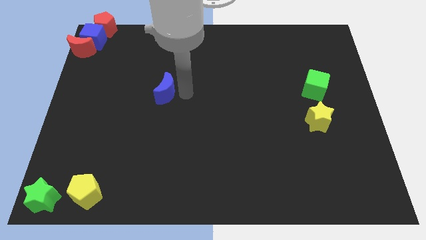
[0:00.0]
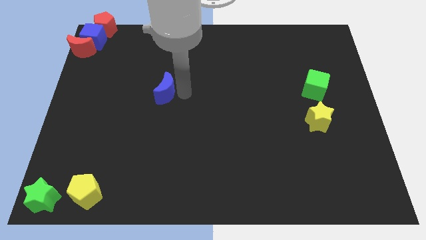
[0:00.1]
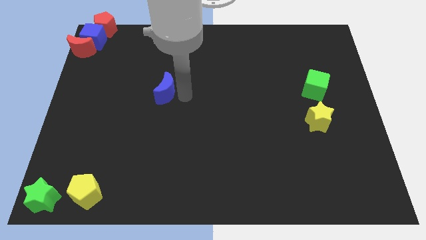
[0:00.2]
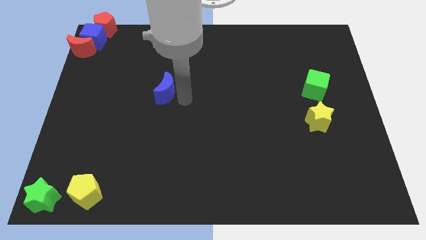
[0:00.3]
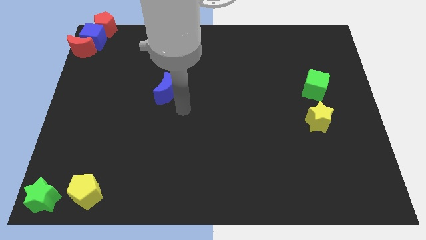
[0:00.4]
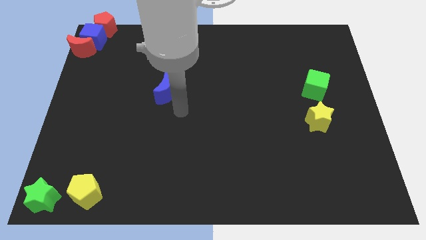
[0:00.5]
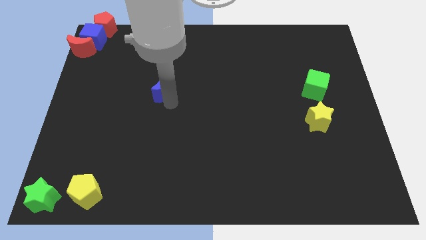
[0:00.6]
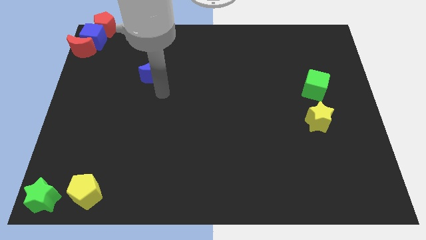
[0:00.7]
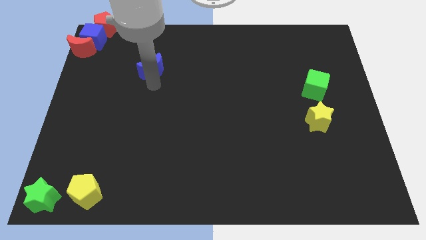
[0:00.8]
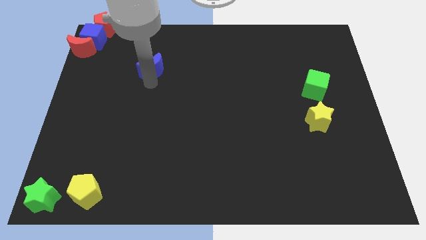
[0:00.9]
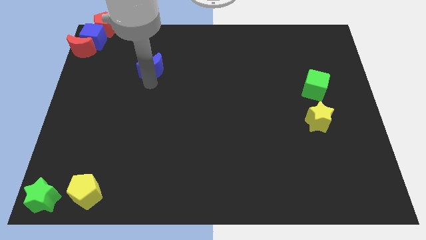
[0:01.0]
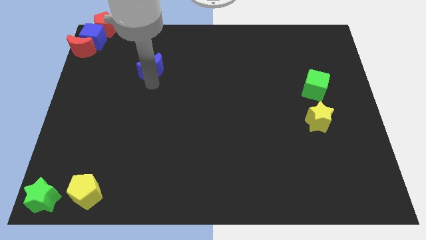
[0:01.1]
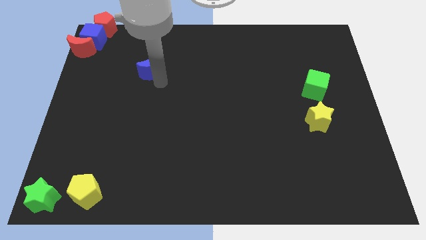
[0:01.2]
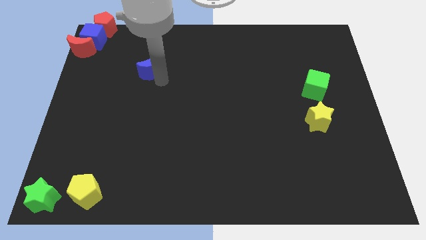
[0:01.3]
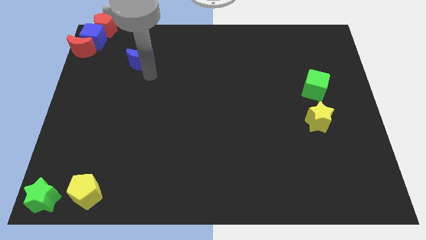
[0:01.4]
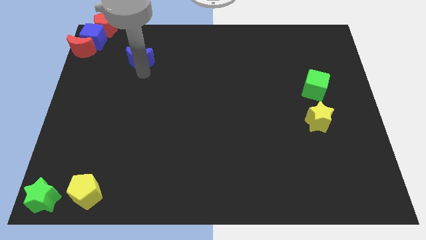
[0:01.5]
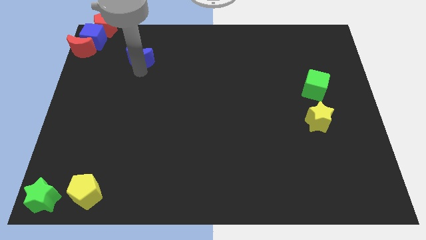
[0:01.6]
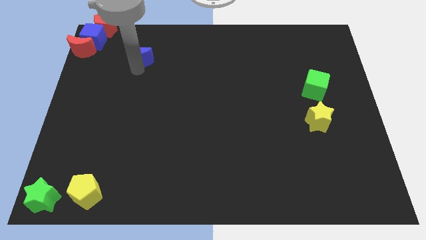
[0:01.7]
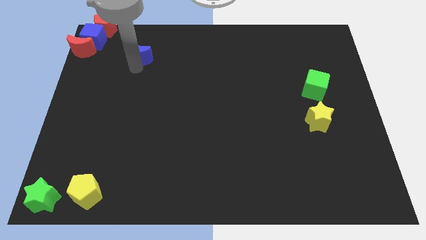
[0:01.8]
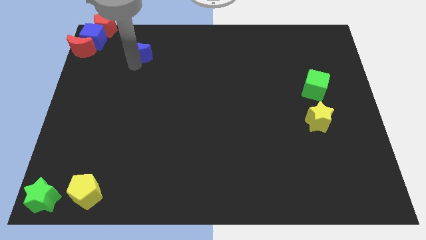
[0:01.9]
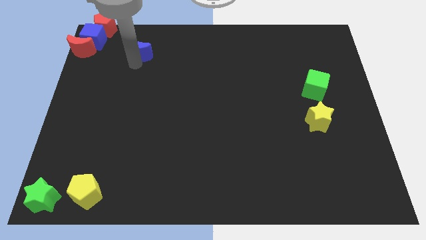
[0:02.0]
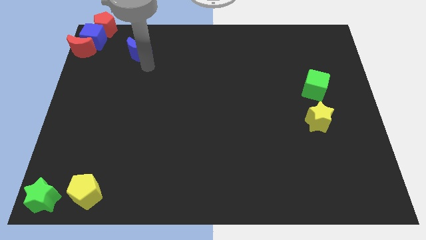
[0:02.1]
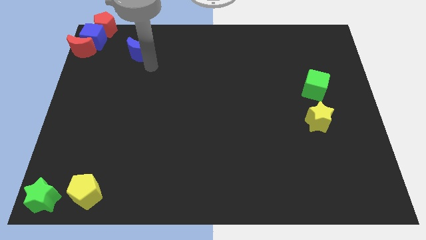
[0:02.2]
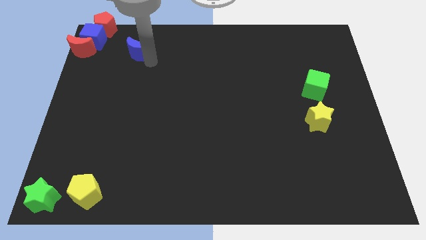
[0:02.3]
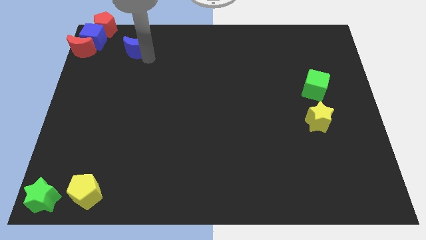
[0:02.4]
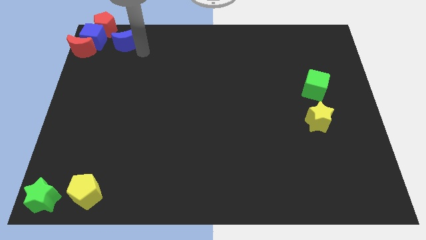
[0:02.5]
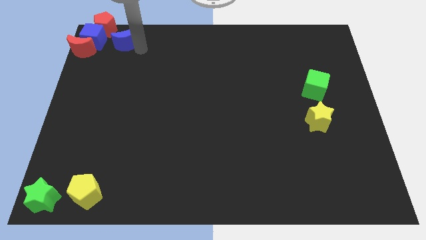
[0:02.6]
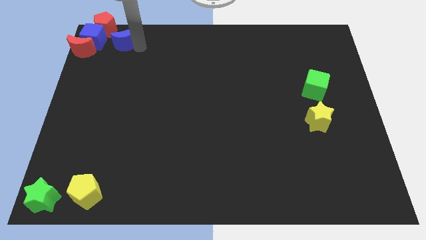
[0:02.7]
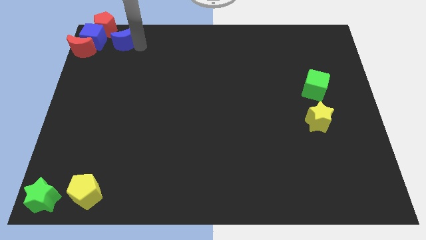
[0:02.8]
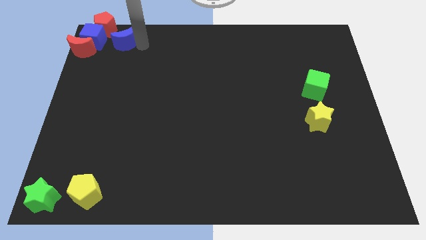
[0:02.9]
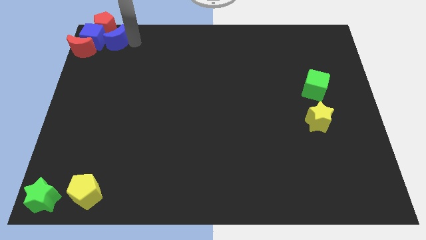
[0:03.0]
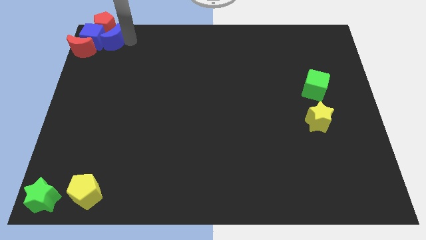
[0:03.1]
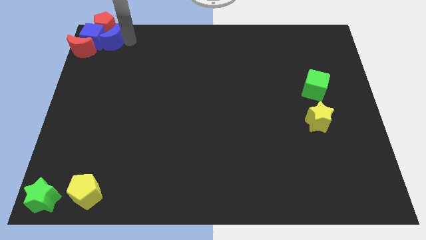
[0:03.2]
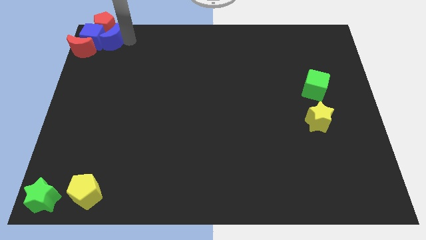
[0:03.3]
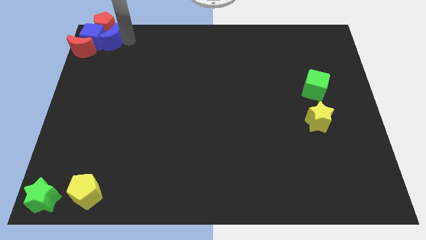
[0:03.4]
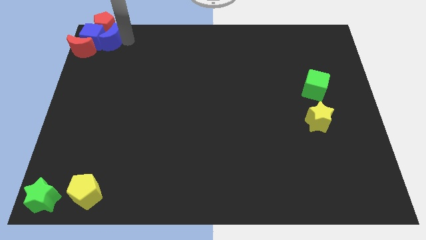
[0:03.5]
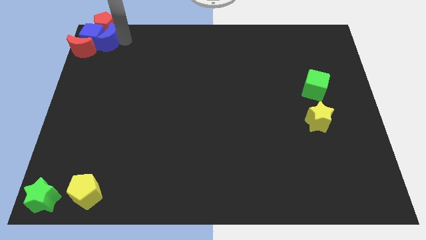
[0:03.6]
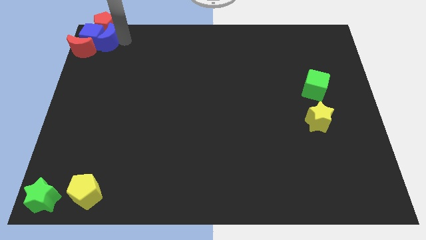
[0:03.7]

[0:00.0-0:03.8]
move the blue moon into the right side of the blue cube

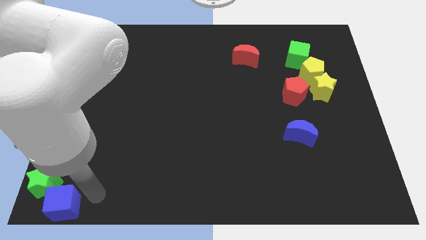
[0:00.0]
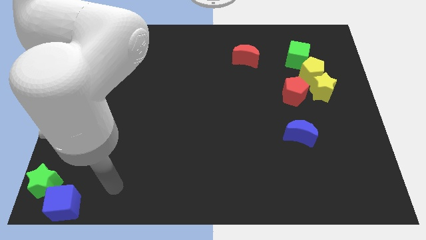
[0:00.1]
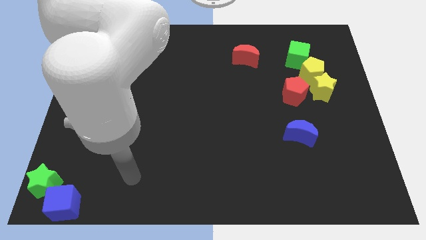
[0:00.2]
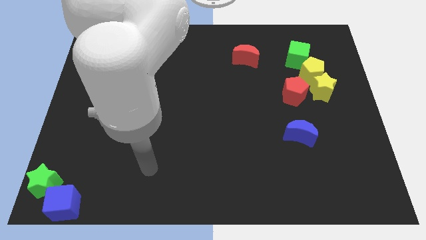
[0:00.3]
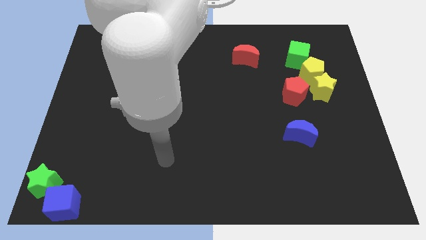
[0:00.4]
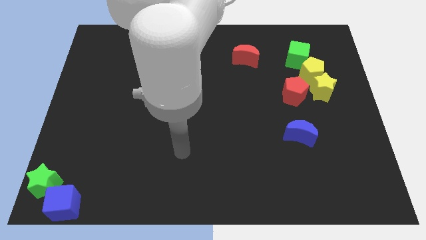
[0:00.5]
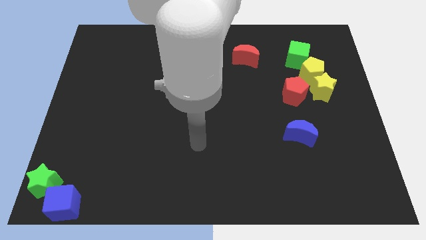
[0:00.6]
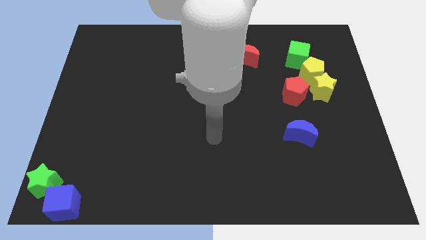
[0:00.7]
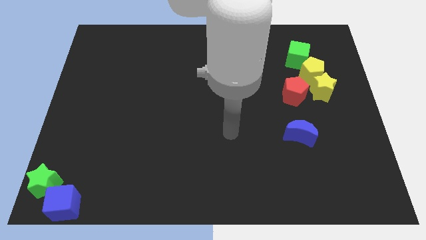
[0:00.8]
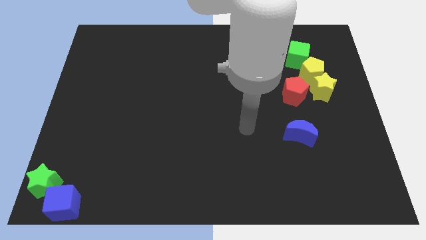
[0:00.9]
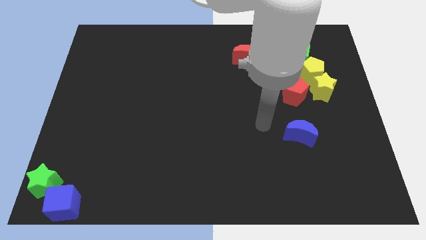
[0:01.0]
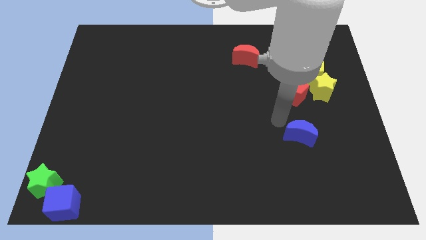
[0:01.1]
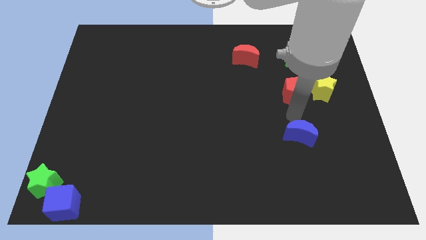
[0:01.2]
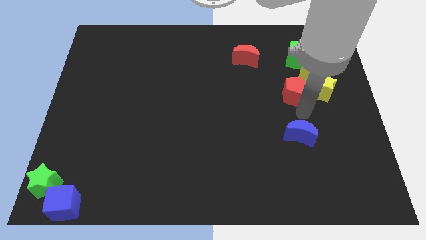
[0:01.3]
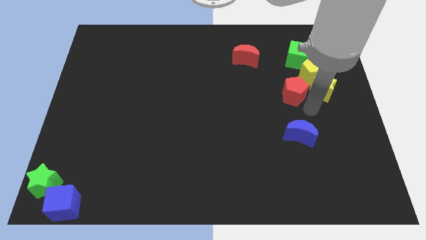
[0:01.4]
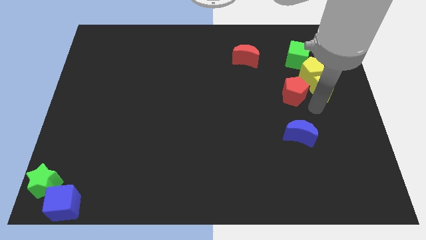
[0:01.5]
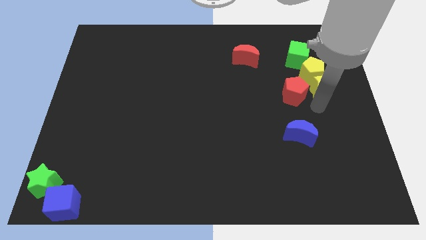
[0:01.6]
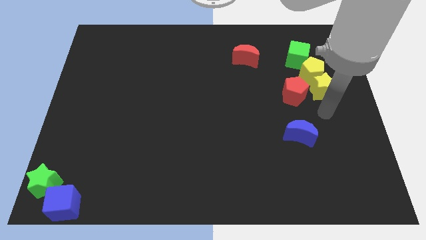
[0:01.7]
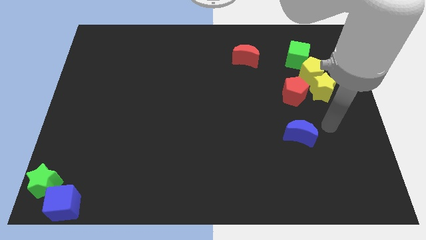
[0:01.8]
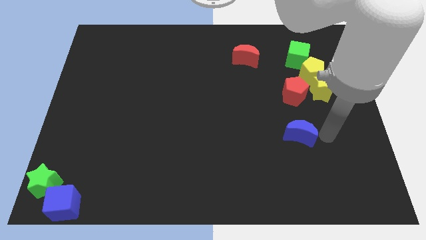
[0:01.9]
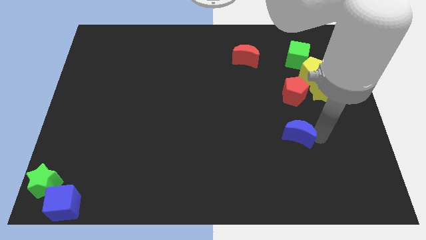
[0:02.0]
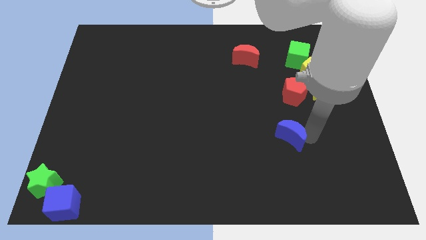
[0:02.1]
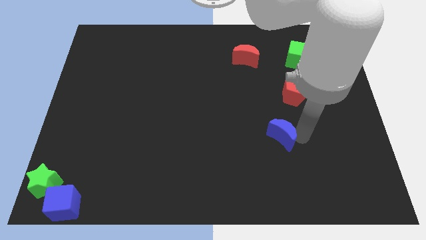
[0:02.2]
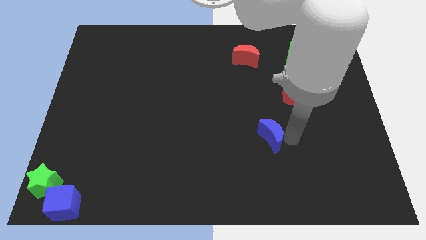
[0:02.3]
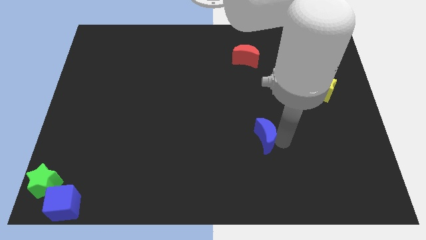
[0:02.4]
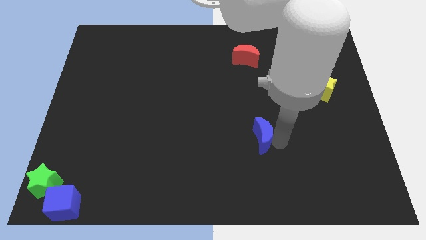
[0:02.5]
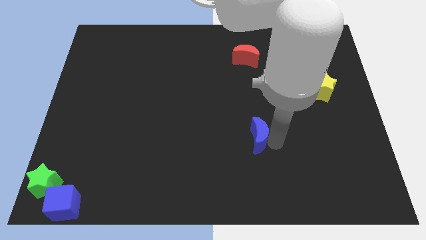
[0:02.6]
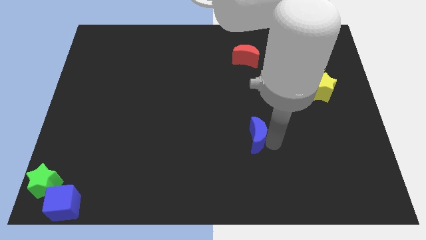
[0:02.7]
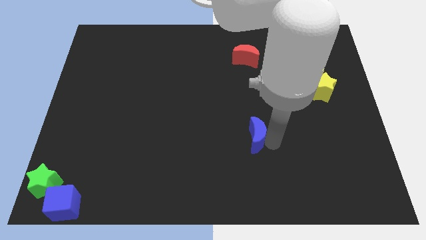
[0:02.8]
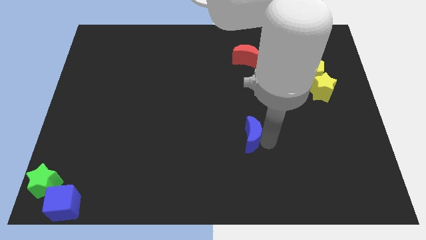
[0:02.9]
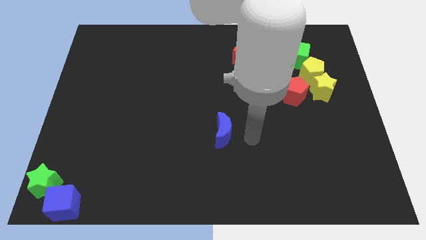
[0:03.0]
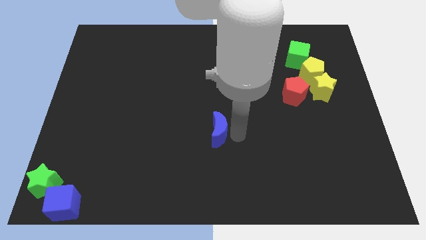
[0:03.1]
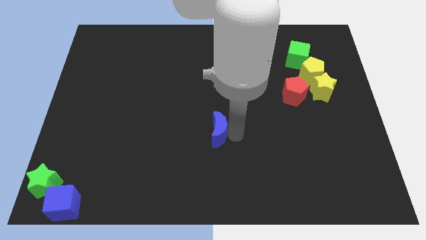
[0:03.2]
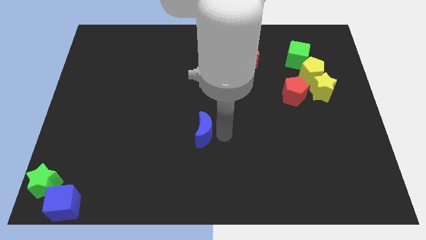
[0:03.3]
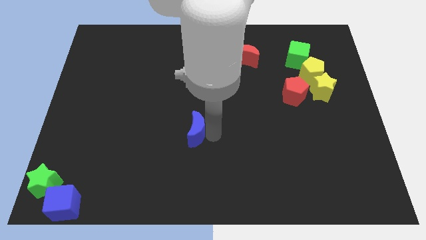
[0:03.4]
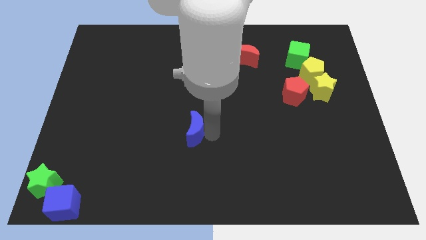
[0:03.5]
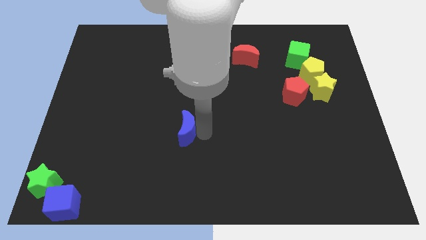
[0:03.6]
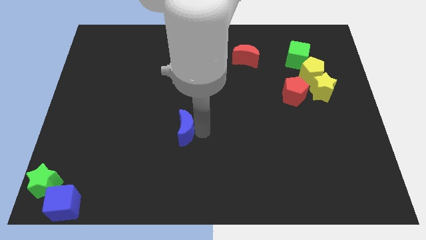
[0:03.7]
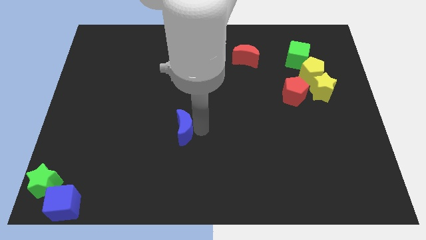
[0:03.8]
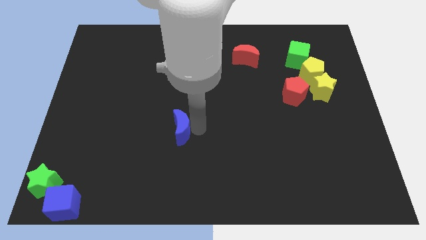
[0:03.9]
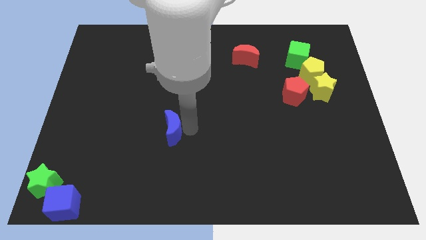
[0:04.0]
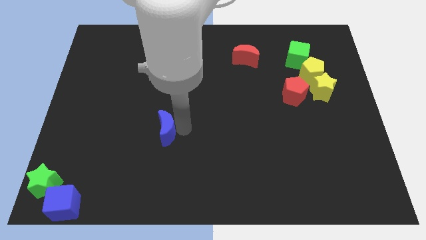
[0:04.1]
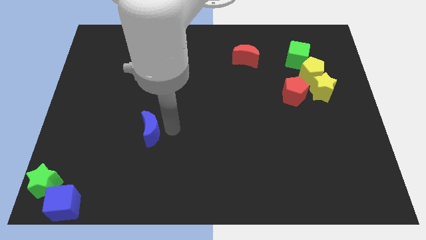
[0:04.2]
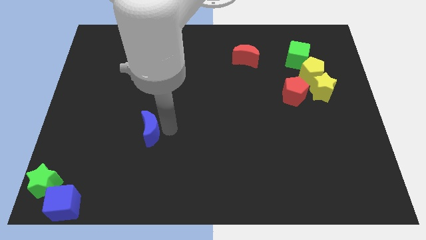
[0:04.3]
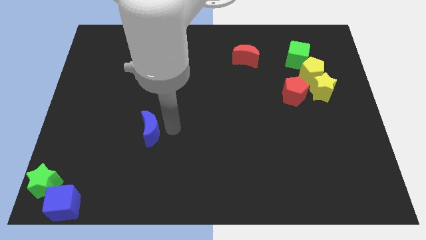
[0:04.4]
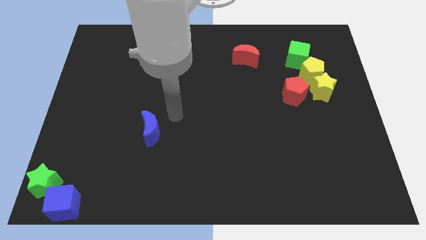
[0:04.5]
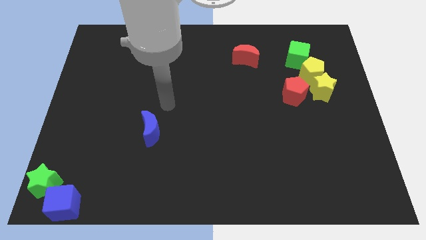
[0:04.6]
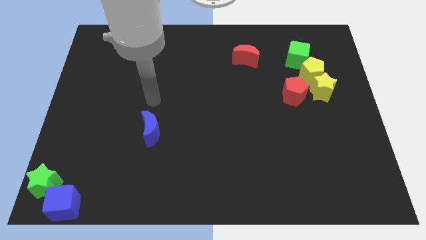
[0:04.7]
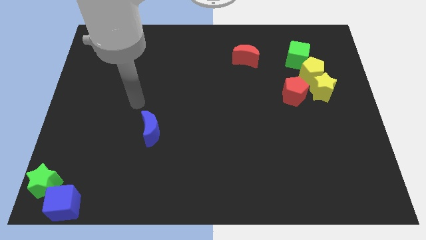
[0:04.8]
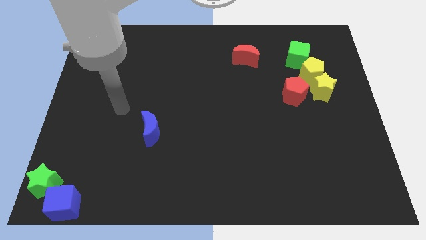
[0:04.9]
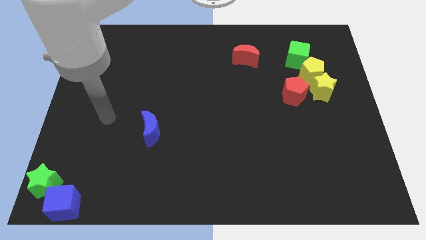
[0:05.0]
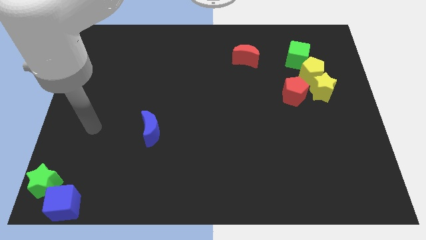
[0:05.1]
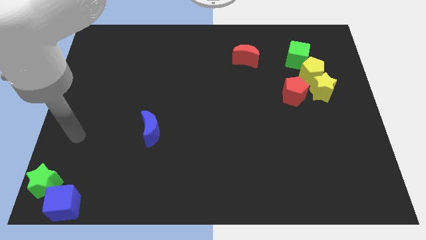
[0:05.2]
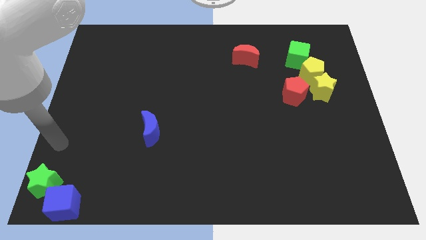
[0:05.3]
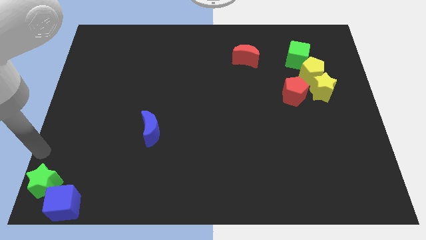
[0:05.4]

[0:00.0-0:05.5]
push the blue crescent towards the left center of the board
